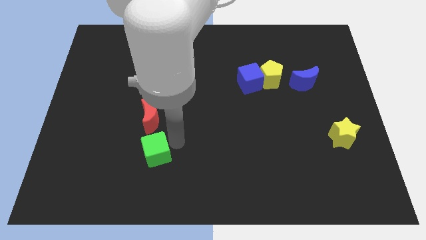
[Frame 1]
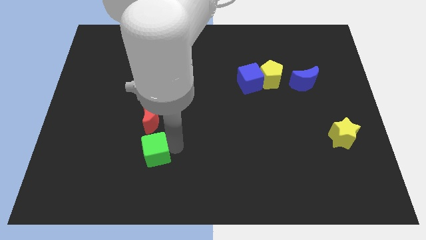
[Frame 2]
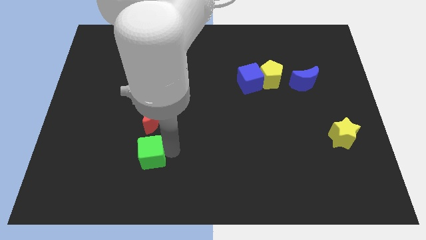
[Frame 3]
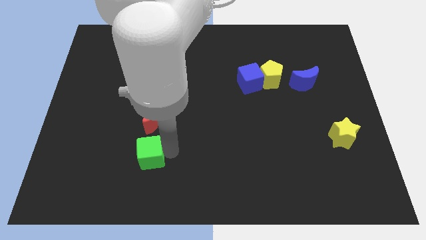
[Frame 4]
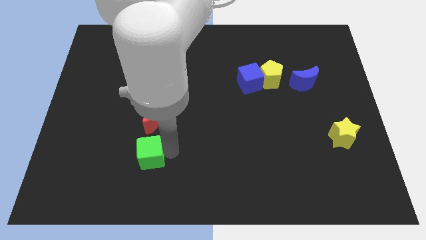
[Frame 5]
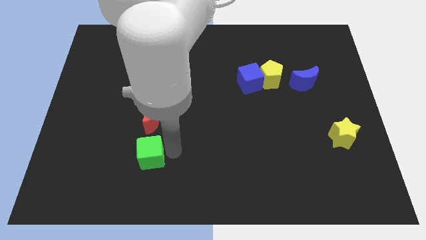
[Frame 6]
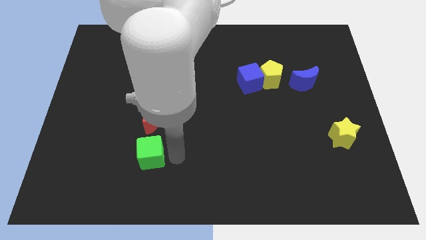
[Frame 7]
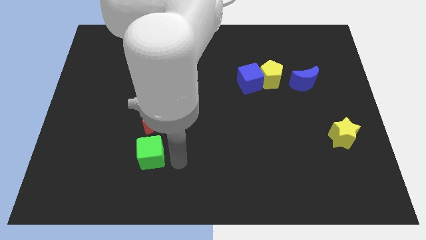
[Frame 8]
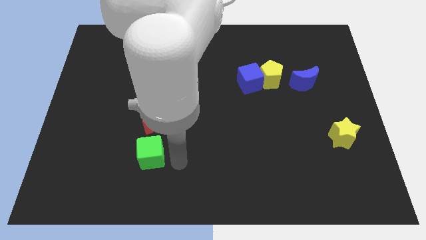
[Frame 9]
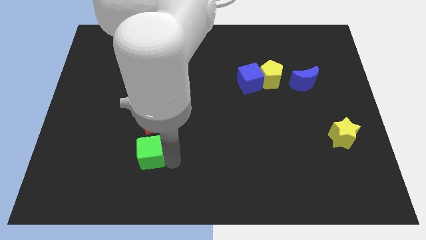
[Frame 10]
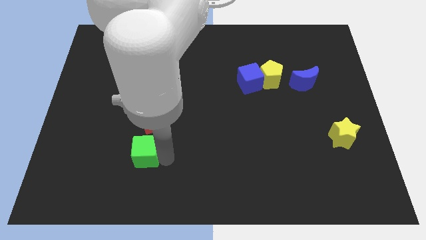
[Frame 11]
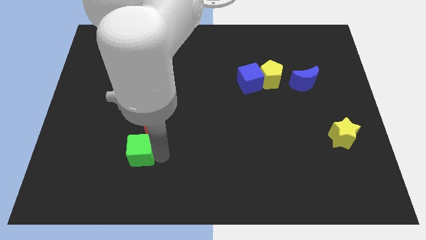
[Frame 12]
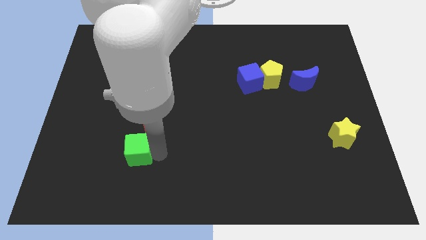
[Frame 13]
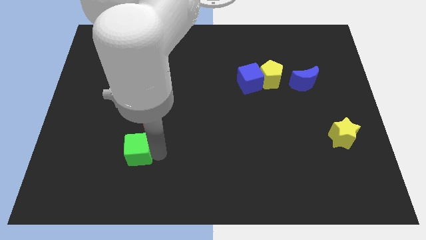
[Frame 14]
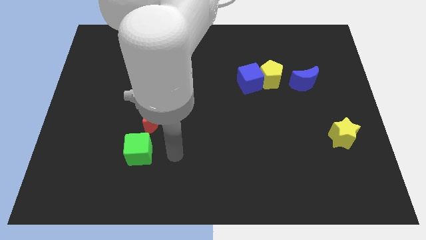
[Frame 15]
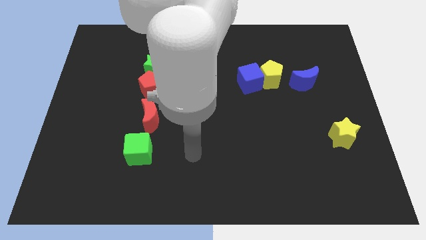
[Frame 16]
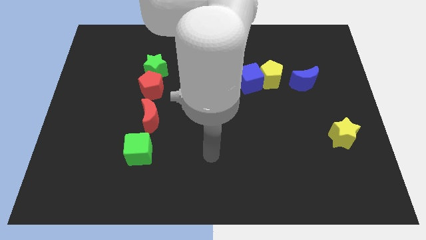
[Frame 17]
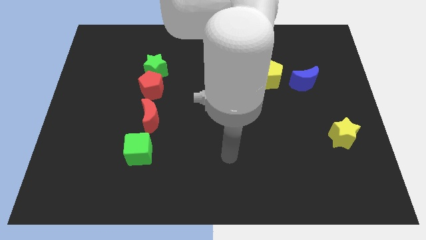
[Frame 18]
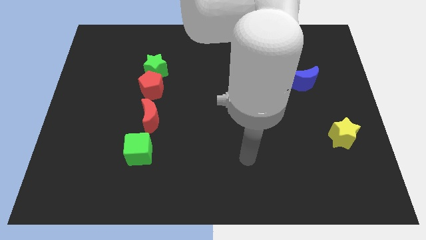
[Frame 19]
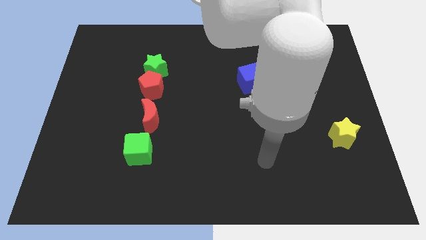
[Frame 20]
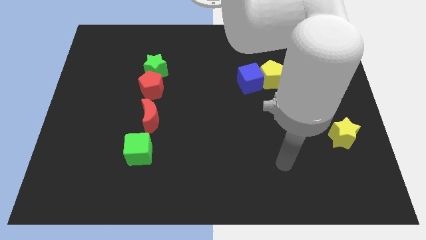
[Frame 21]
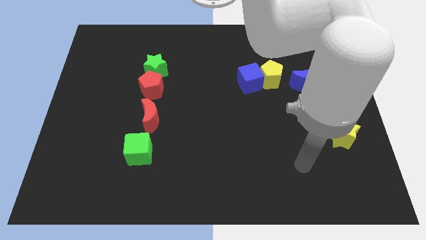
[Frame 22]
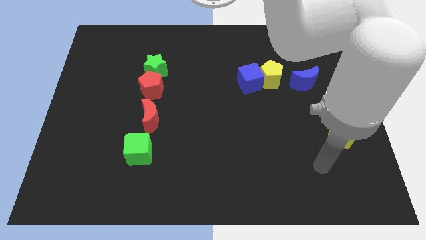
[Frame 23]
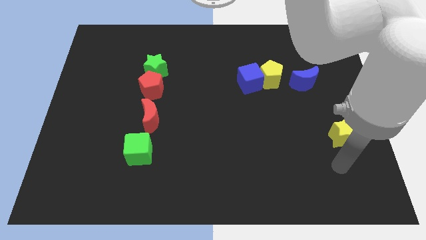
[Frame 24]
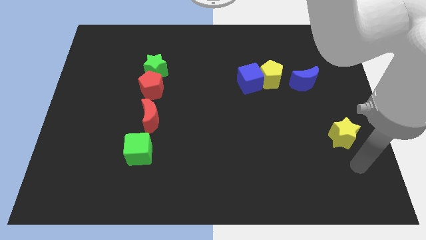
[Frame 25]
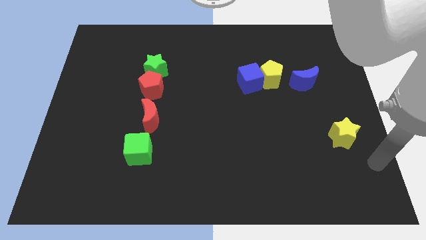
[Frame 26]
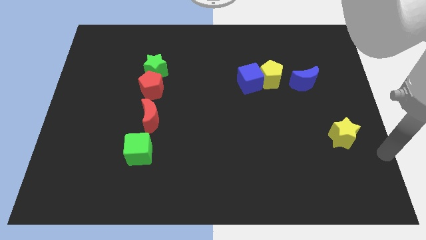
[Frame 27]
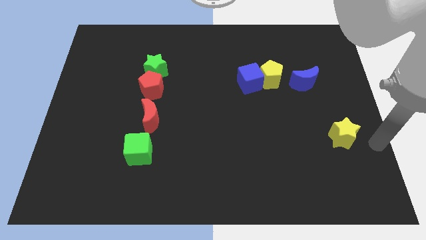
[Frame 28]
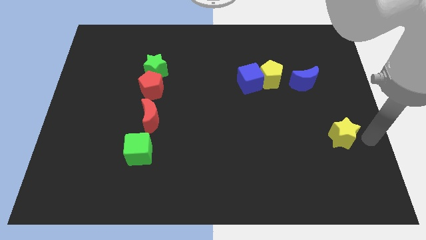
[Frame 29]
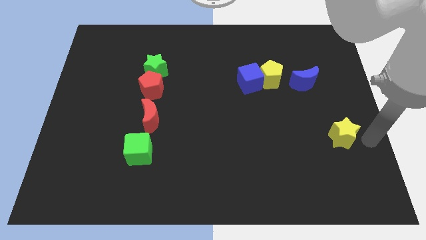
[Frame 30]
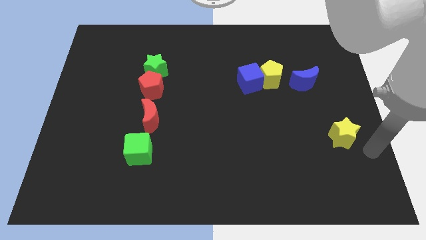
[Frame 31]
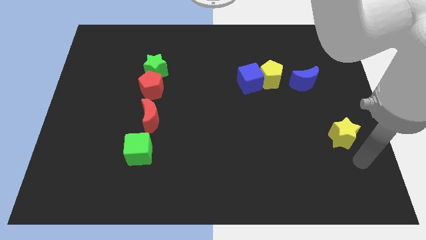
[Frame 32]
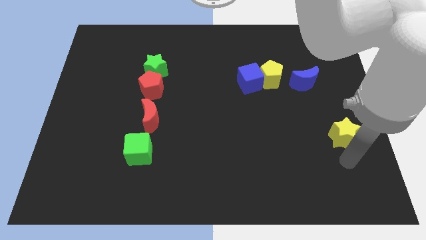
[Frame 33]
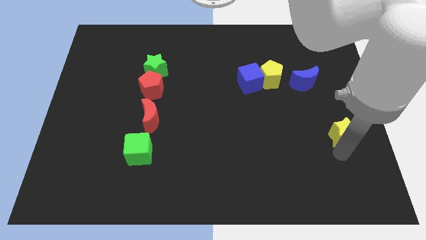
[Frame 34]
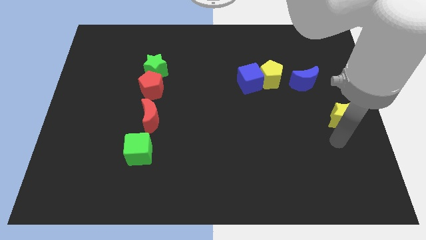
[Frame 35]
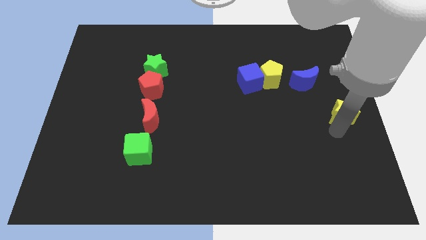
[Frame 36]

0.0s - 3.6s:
move the arm to the right bottom of the yellow star

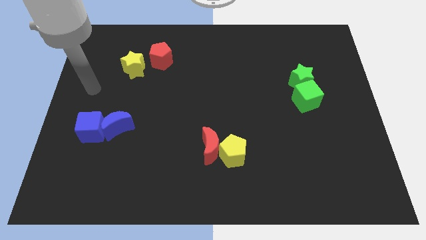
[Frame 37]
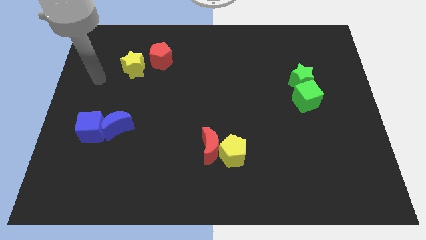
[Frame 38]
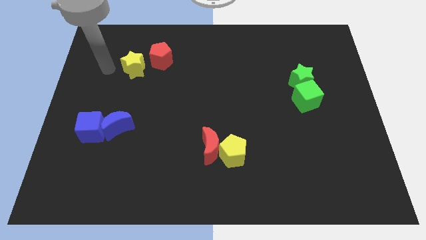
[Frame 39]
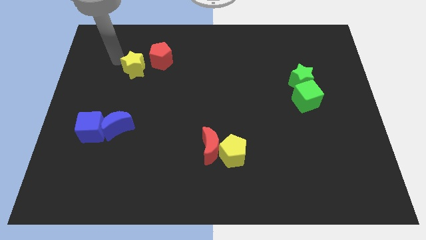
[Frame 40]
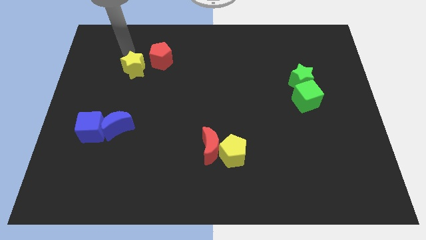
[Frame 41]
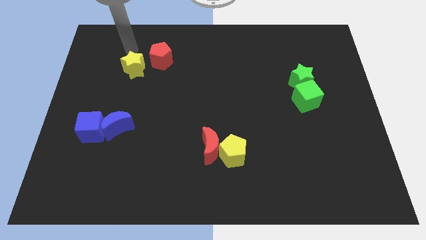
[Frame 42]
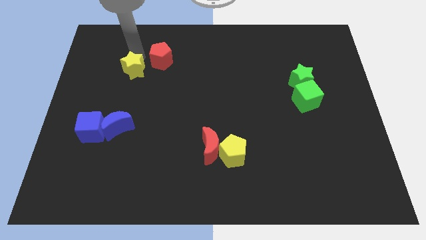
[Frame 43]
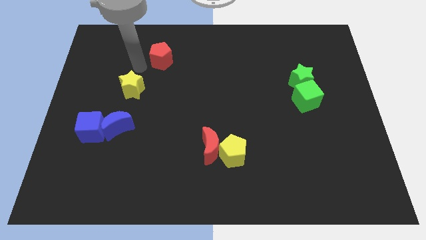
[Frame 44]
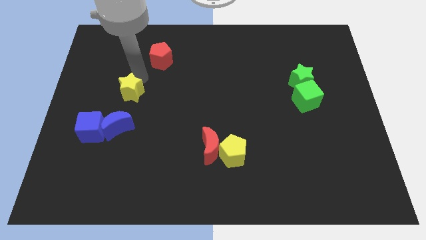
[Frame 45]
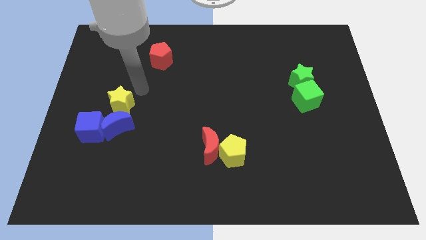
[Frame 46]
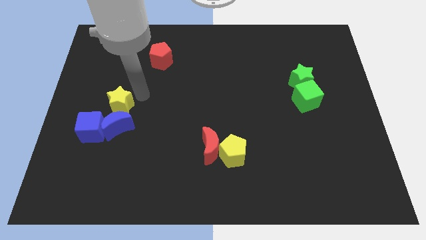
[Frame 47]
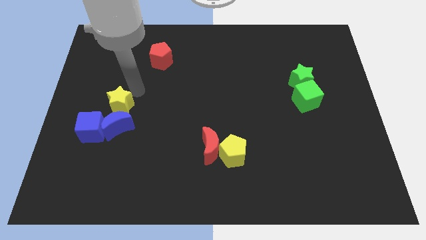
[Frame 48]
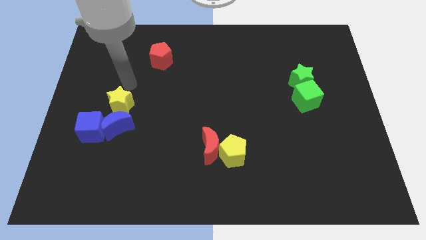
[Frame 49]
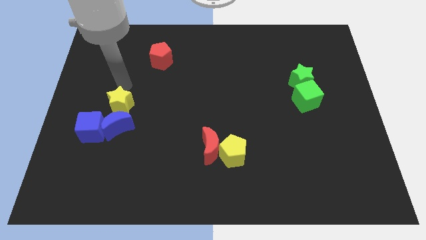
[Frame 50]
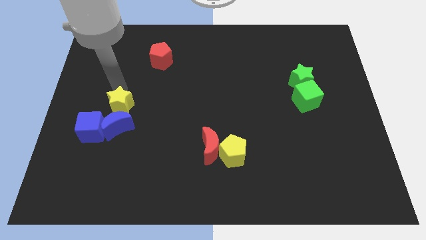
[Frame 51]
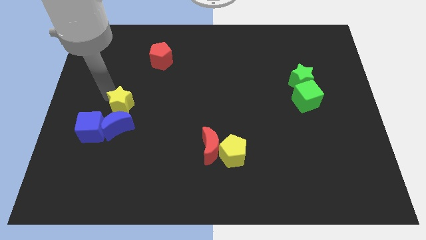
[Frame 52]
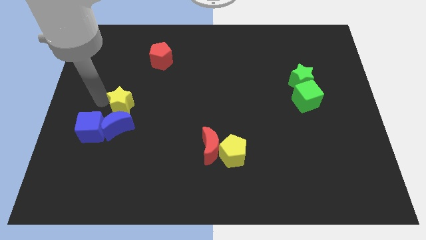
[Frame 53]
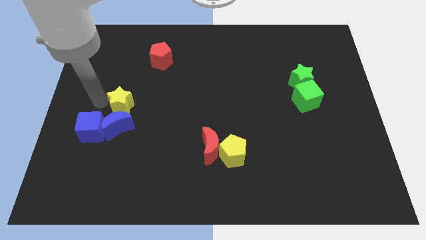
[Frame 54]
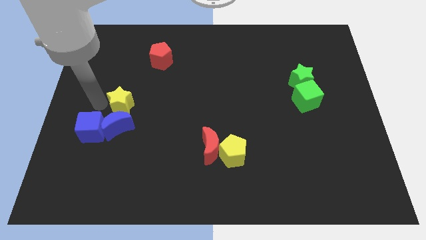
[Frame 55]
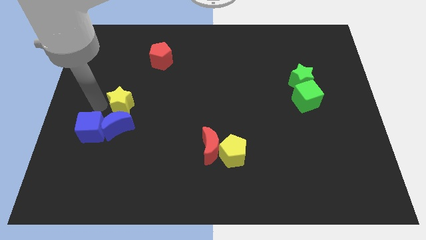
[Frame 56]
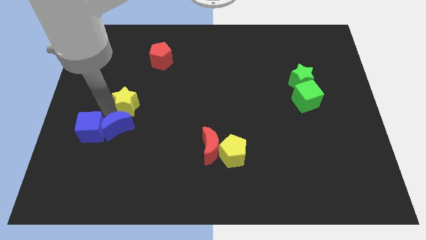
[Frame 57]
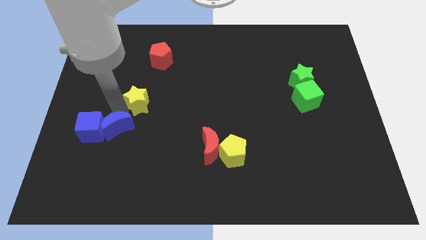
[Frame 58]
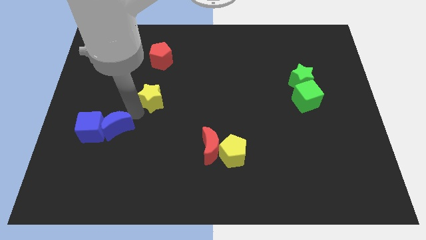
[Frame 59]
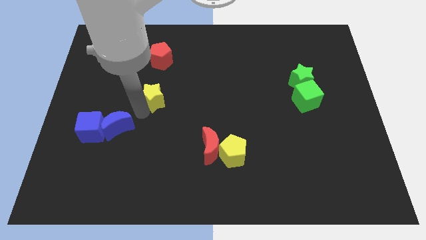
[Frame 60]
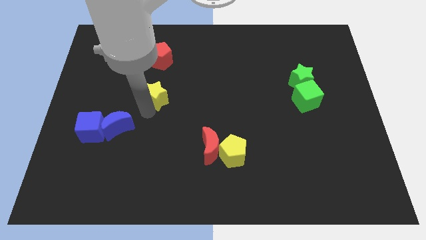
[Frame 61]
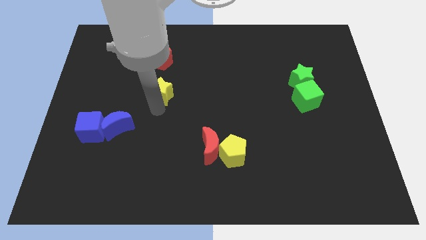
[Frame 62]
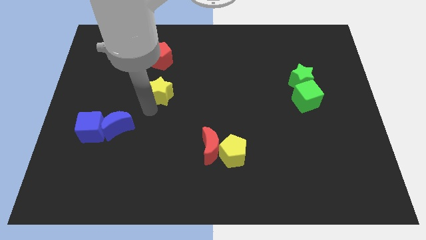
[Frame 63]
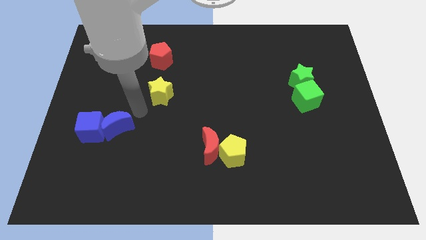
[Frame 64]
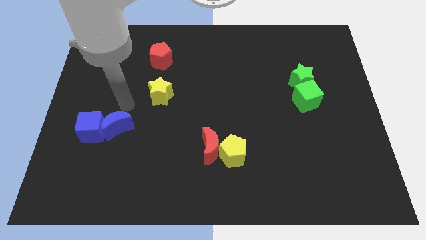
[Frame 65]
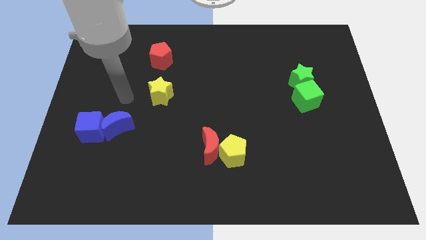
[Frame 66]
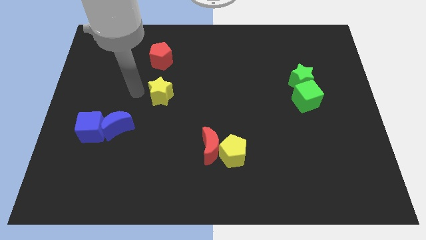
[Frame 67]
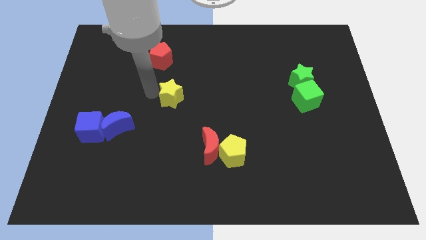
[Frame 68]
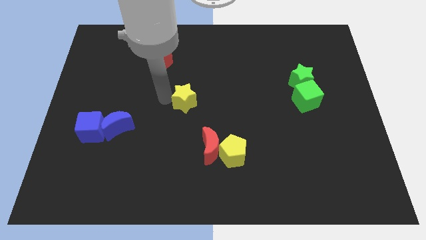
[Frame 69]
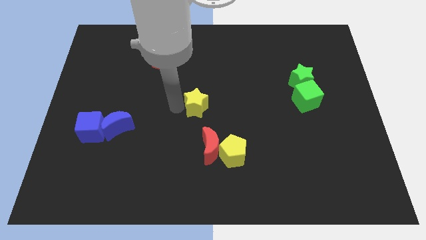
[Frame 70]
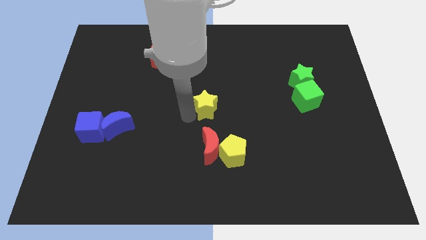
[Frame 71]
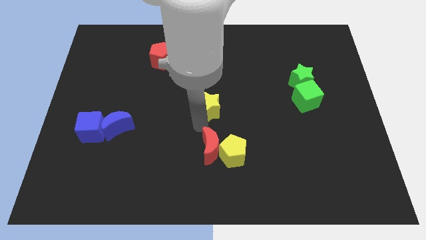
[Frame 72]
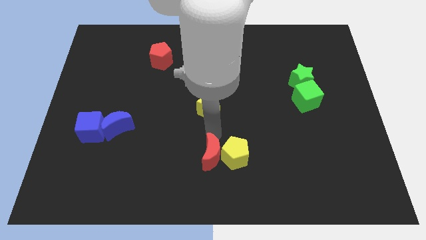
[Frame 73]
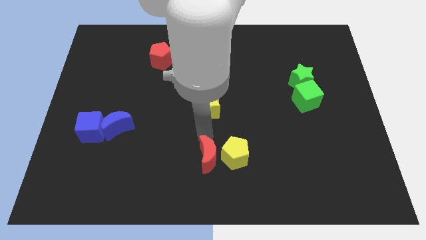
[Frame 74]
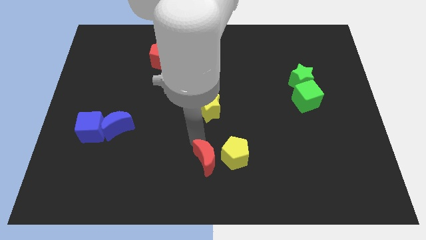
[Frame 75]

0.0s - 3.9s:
move the yellow star to the center of the board

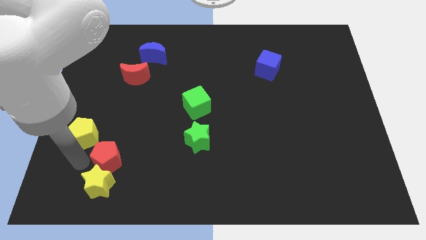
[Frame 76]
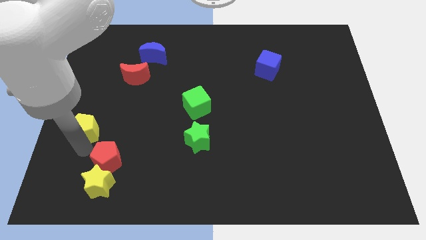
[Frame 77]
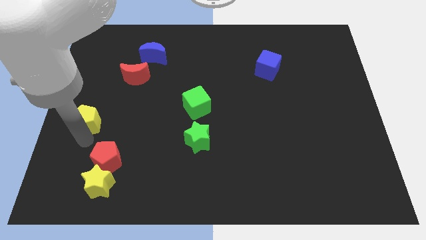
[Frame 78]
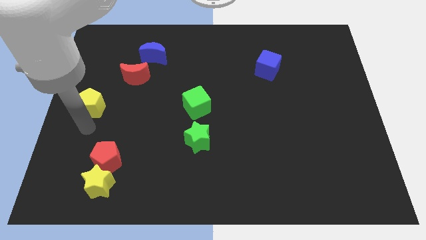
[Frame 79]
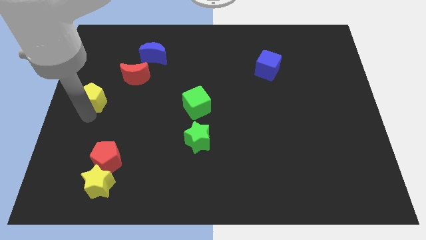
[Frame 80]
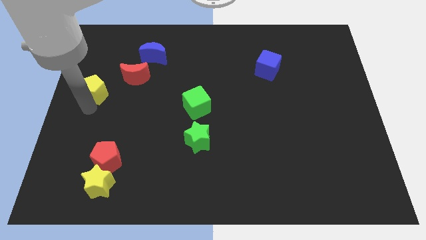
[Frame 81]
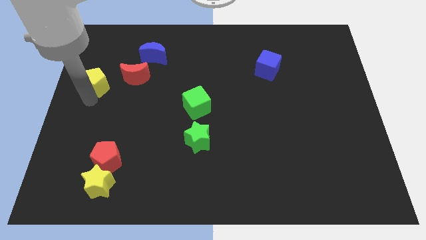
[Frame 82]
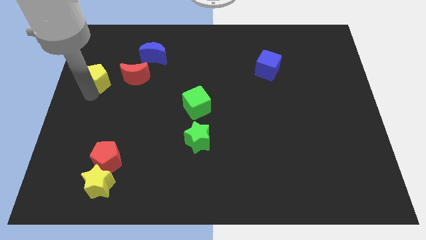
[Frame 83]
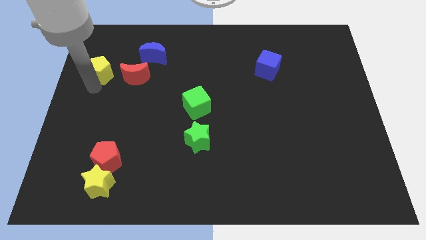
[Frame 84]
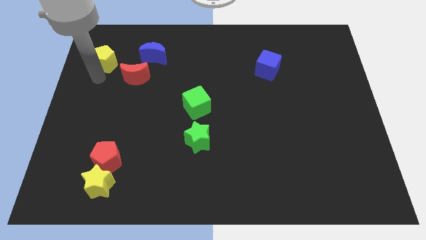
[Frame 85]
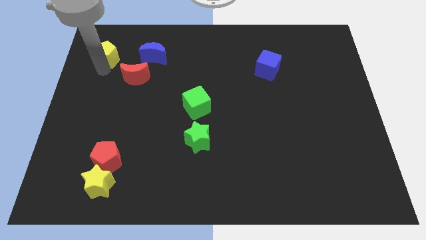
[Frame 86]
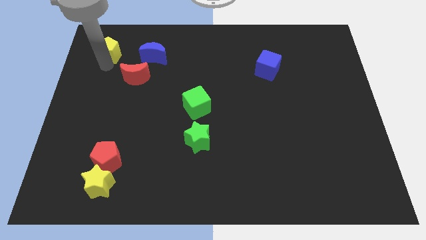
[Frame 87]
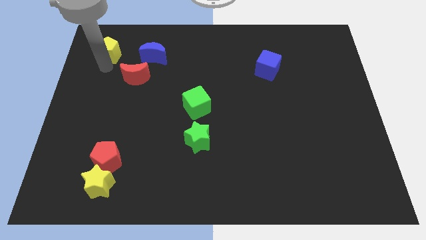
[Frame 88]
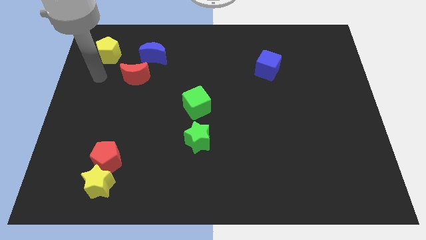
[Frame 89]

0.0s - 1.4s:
push the yellow pentagon towards the top corner of the board
